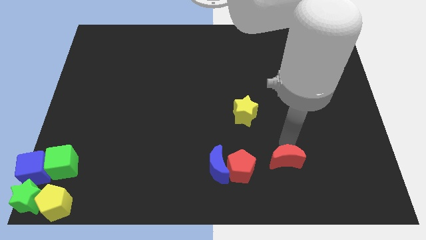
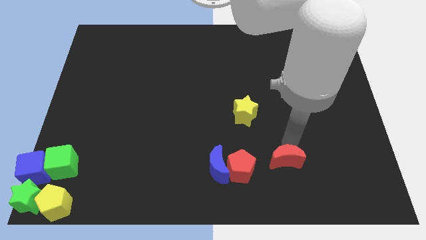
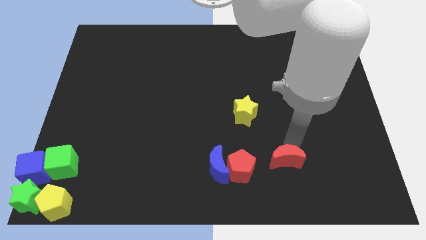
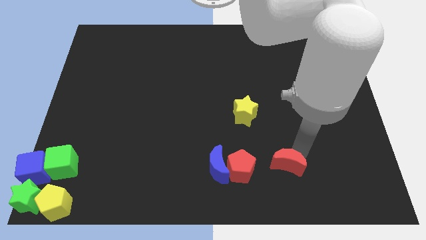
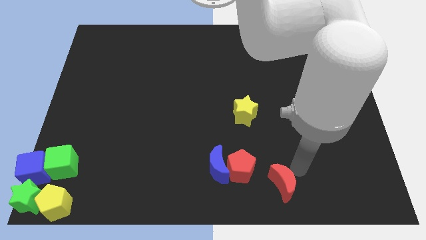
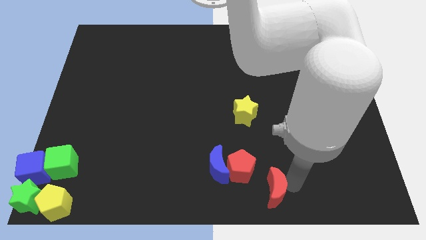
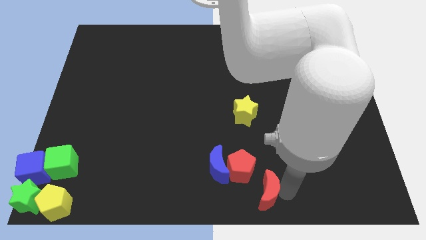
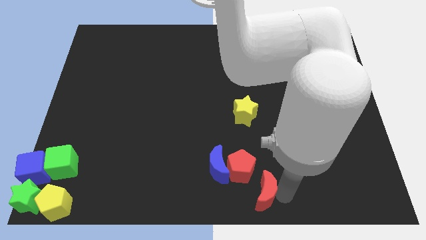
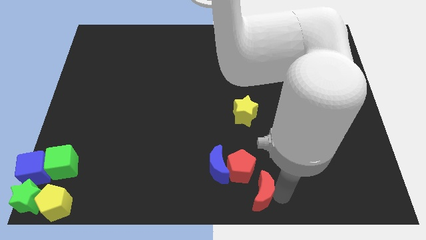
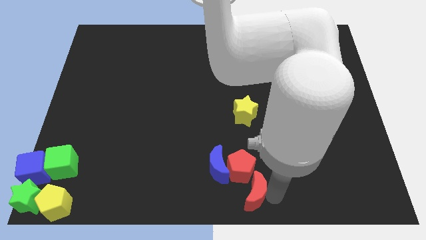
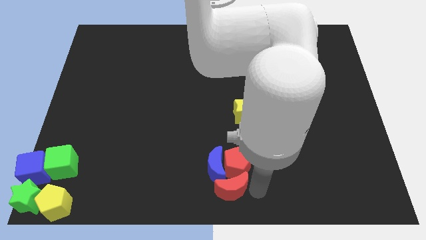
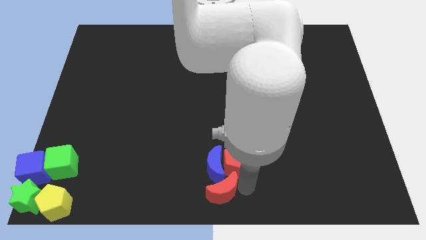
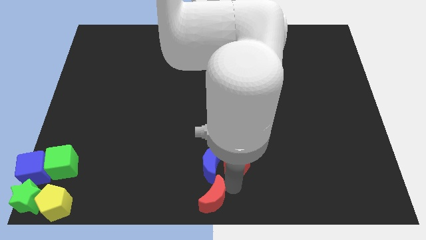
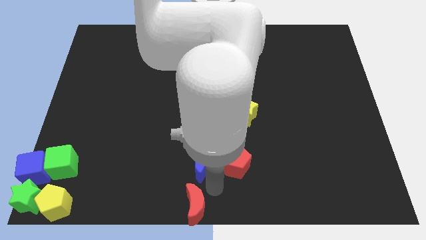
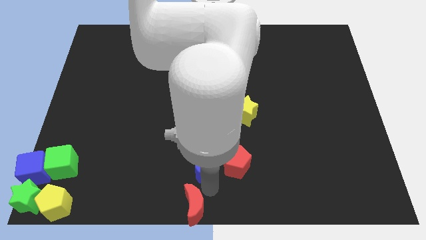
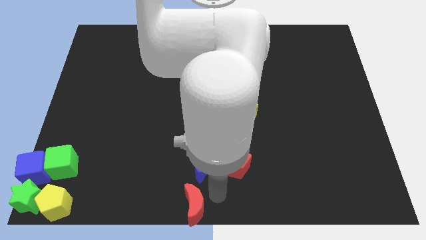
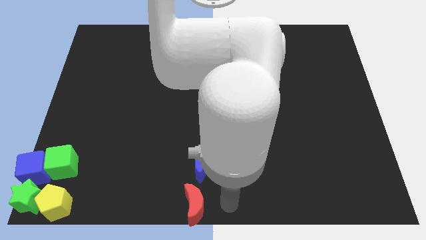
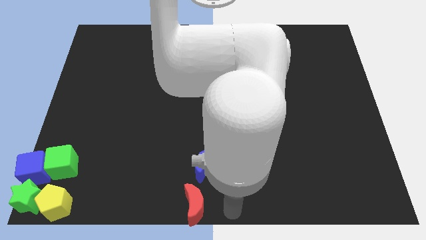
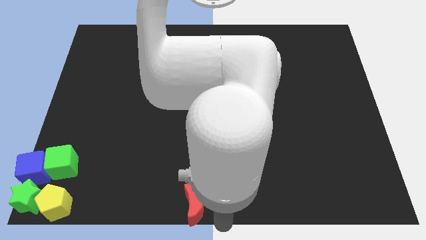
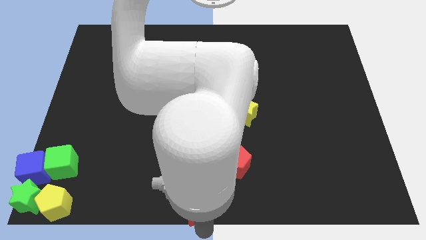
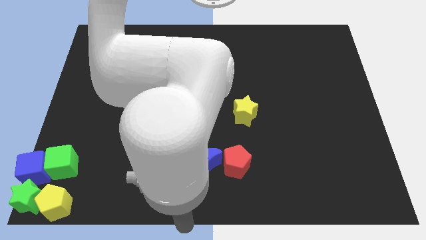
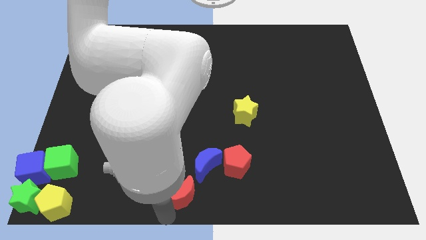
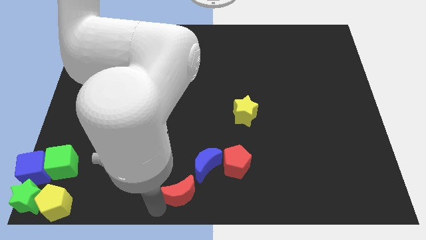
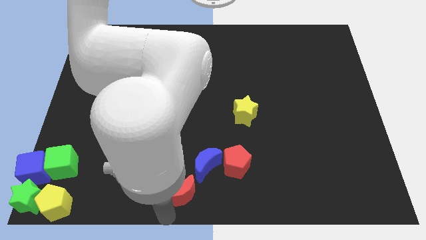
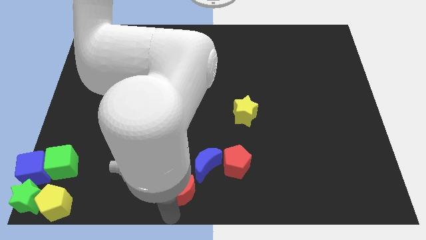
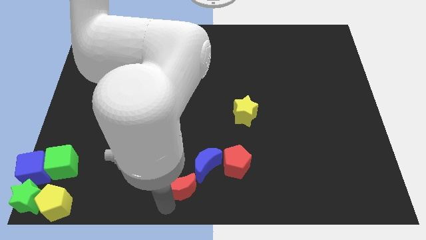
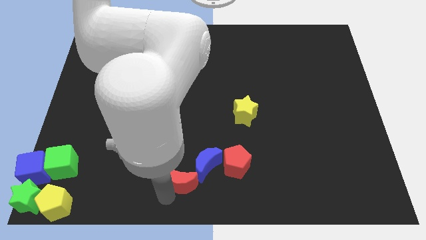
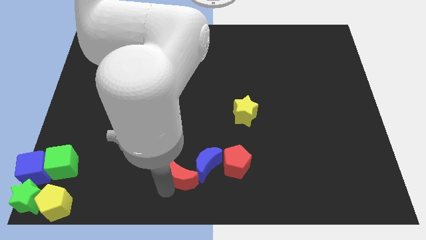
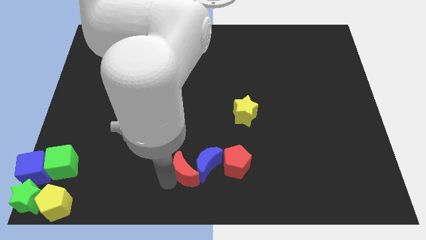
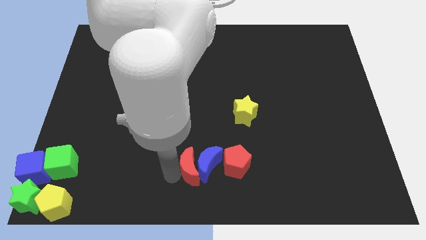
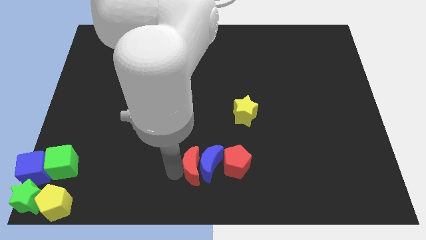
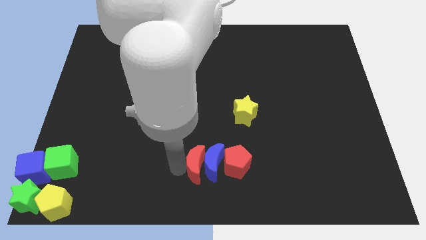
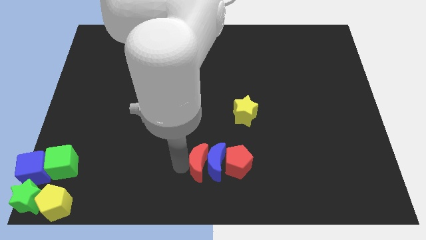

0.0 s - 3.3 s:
move the red moon left to the blue moon

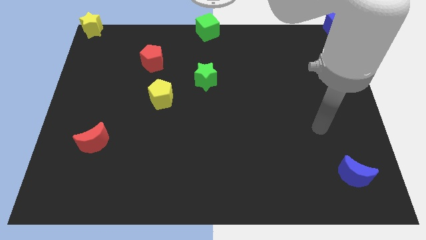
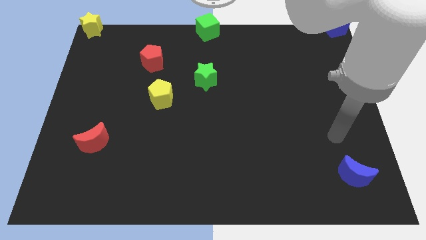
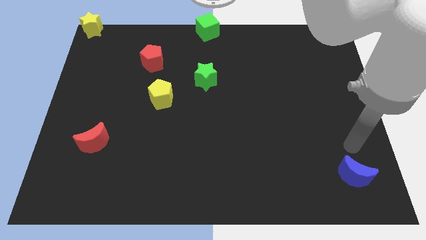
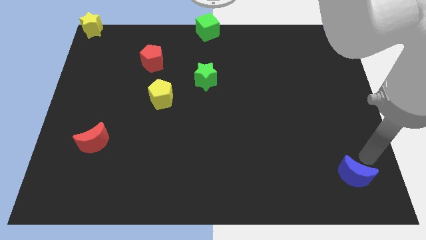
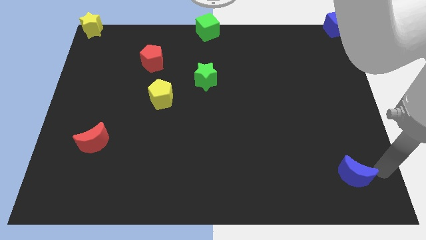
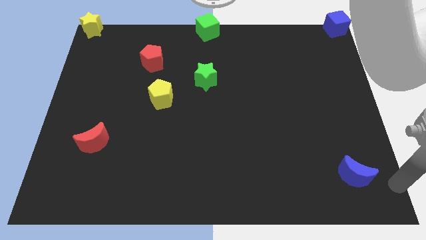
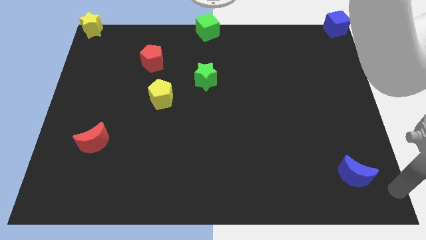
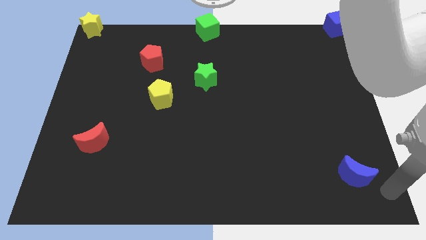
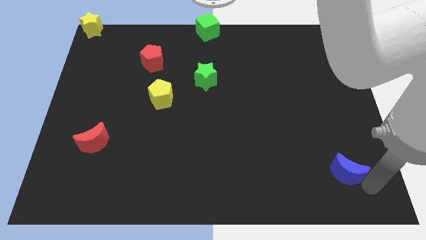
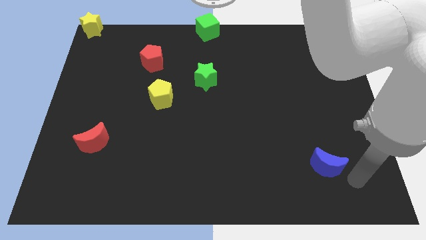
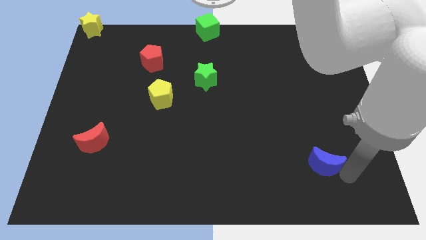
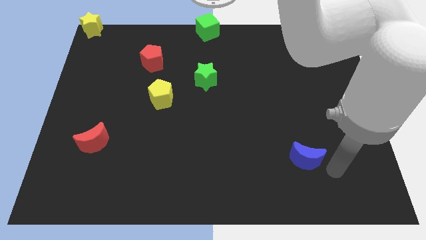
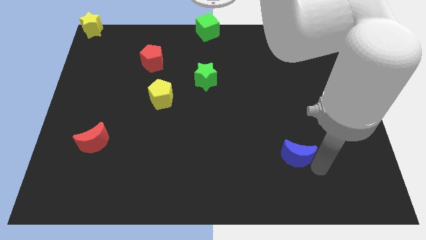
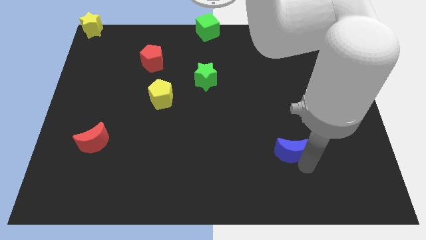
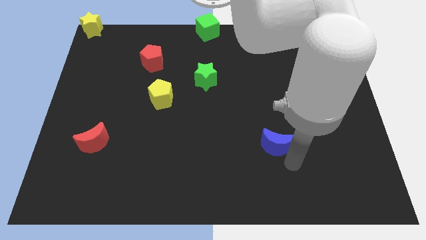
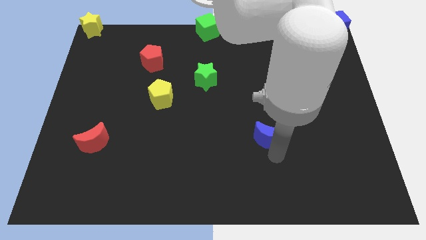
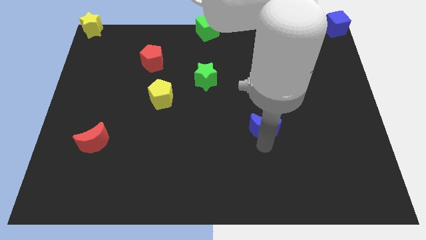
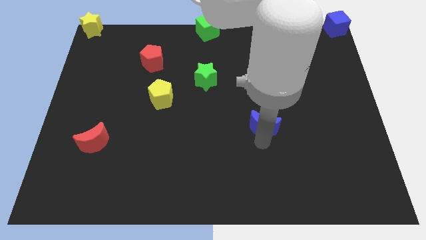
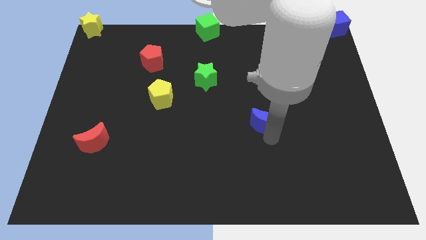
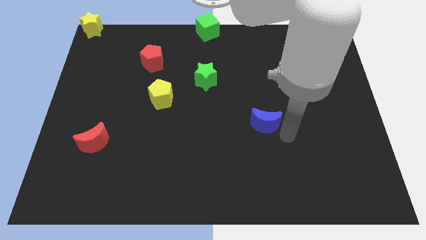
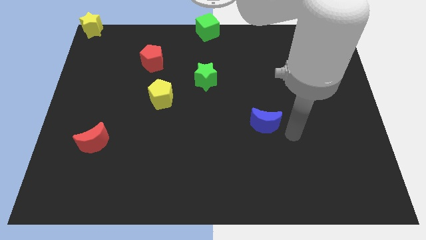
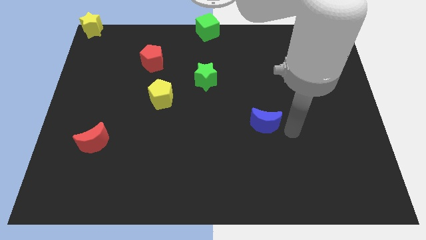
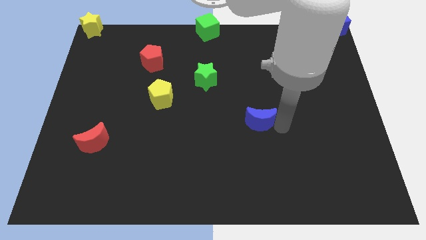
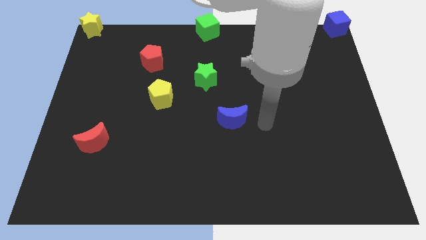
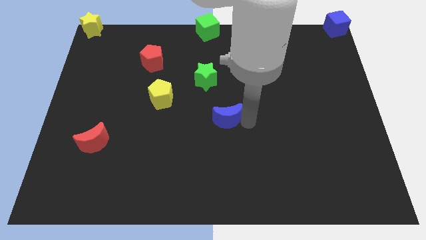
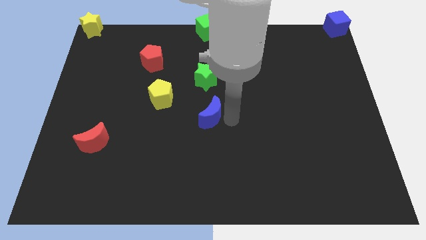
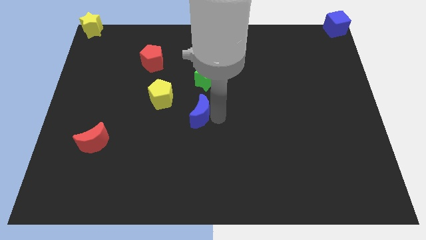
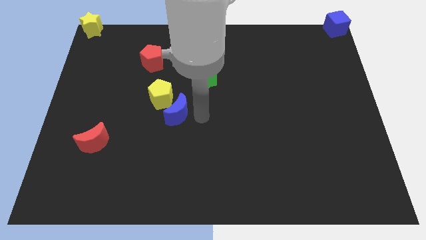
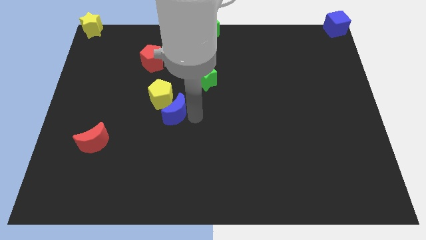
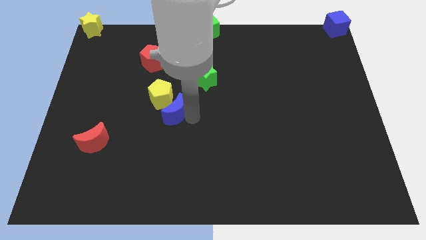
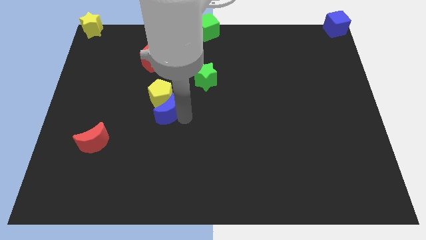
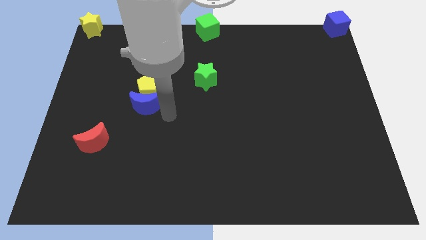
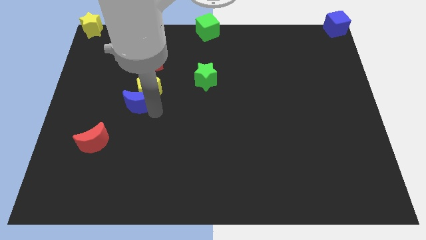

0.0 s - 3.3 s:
slide the blue moon to the bottom side of the yellow pentagon

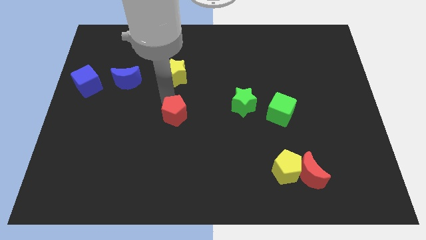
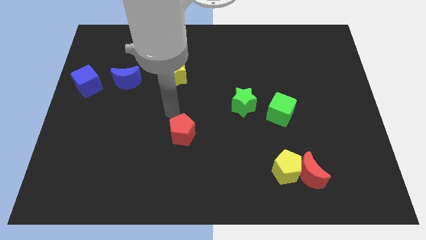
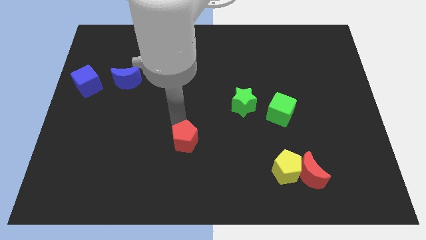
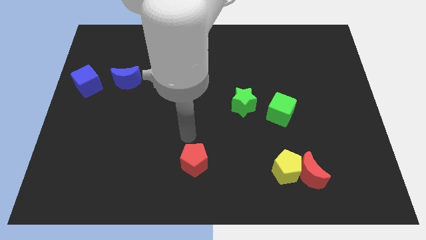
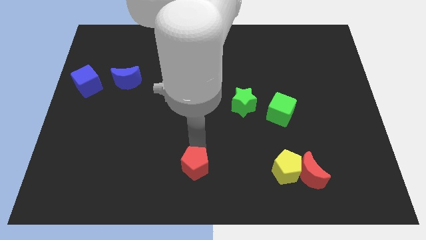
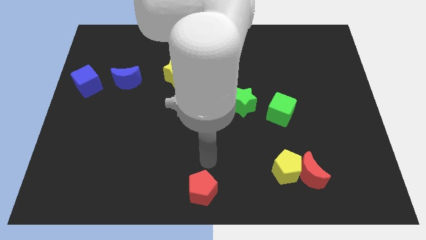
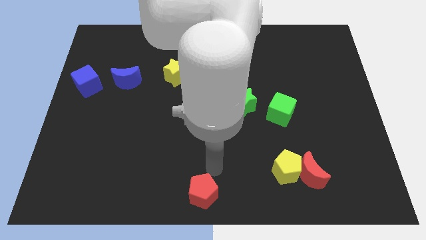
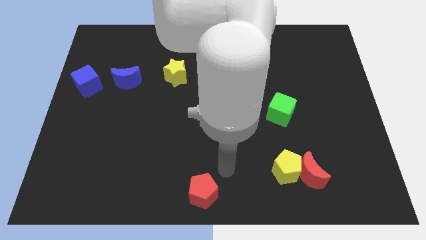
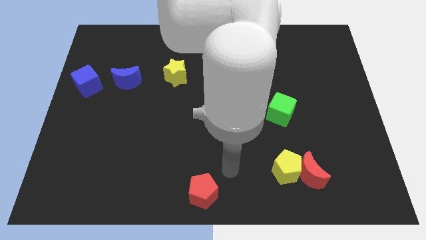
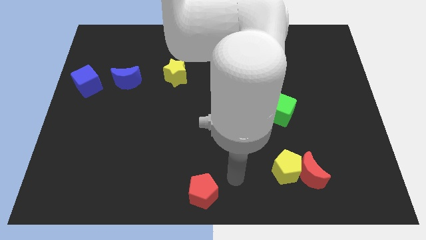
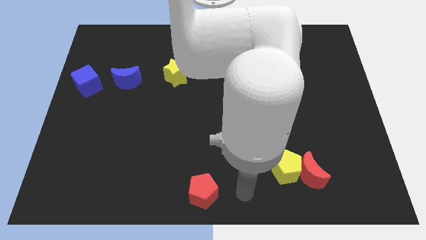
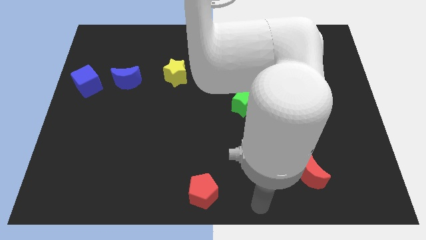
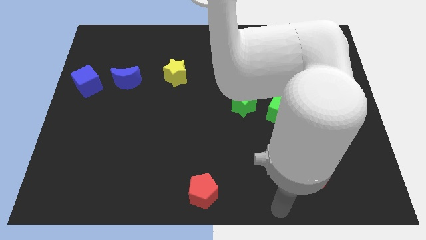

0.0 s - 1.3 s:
push the red pentagon downward

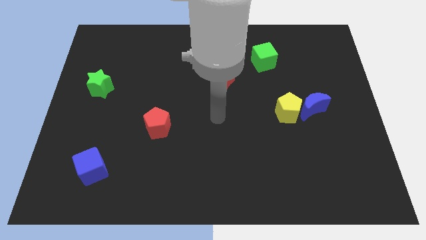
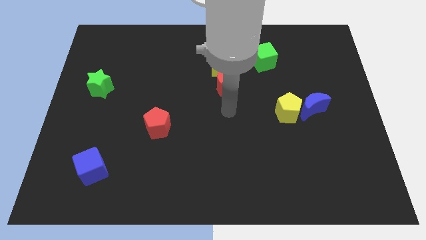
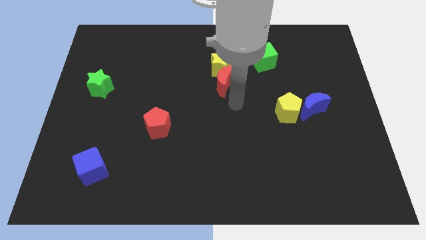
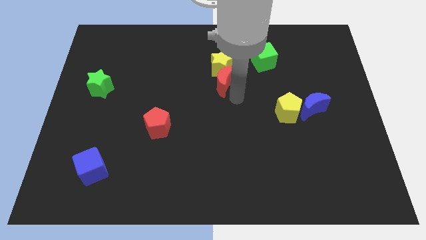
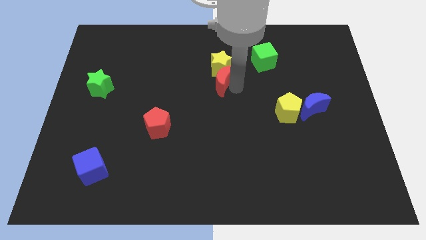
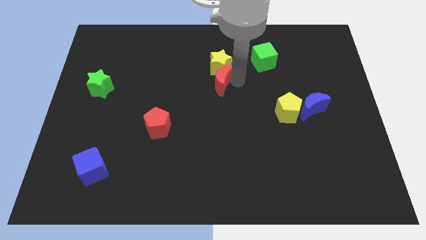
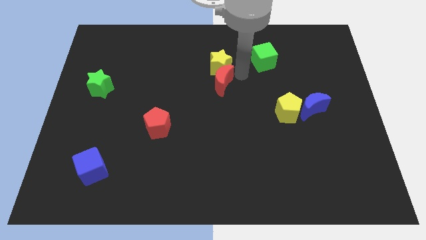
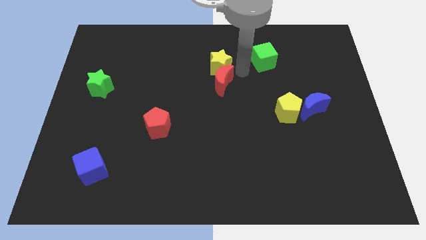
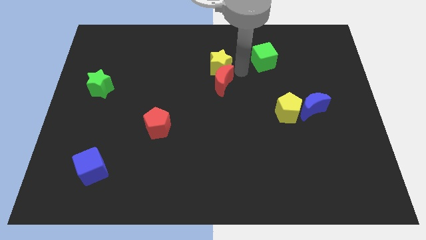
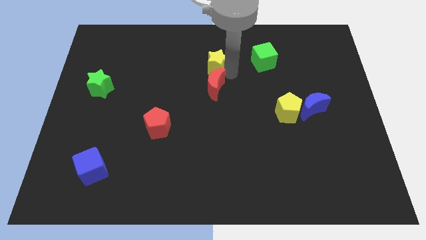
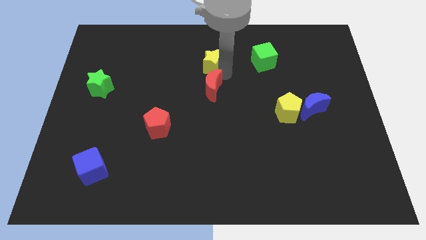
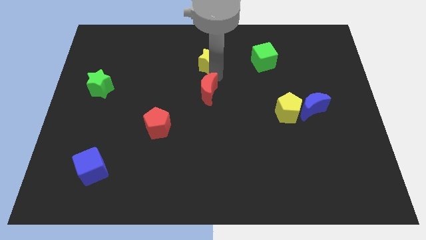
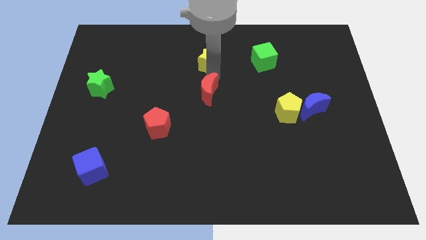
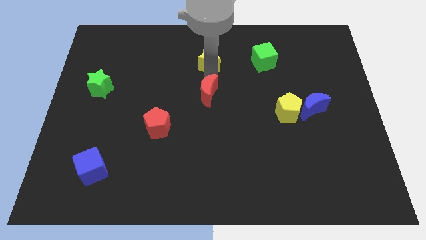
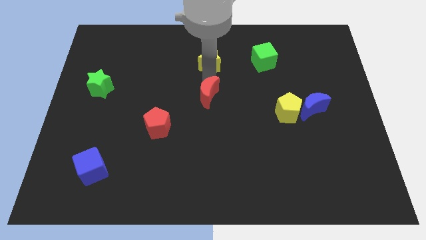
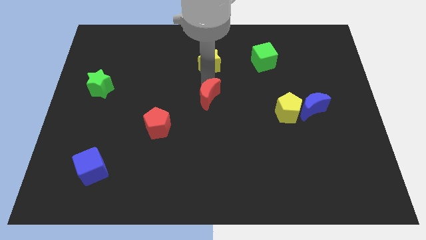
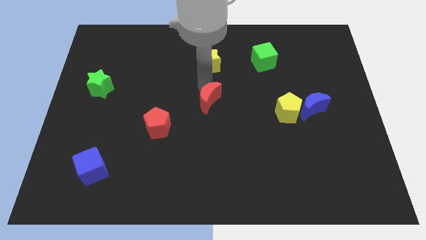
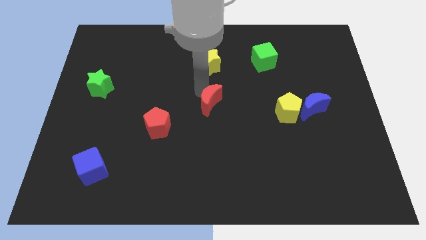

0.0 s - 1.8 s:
separate red moon from the yellow star
